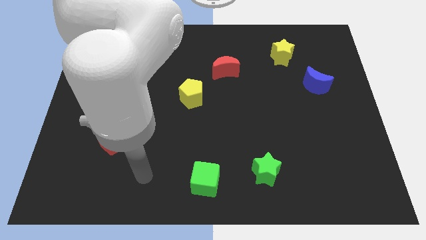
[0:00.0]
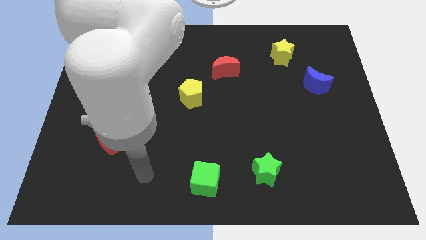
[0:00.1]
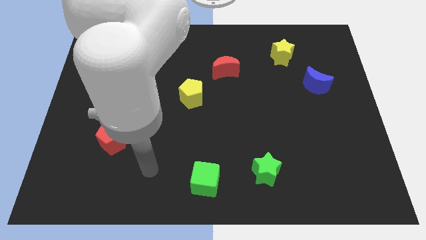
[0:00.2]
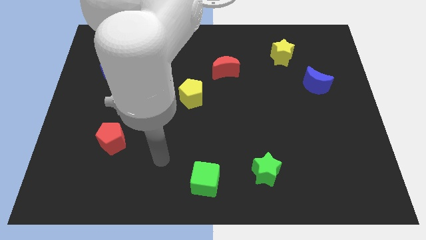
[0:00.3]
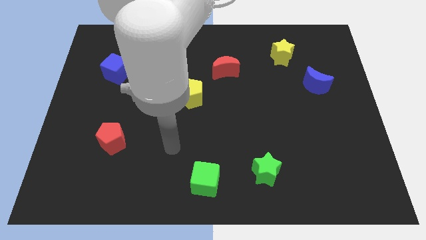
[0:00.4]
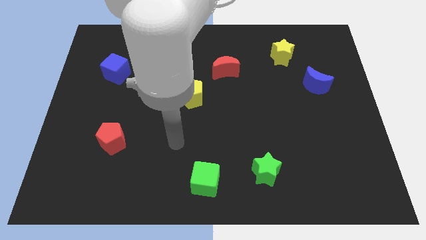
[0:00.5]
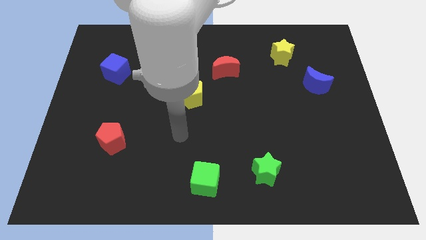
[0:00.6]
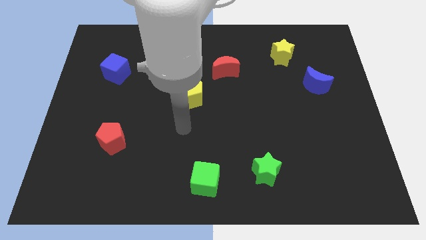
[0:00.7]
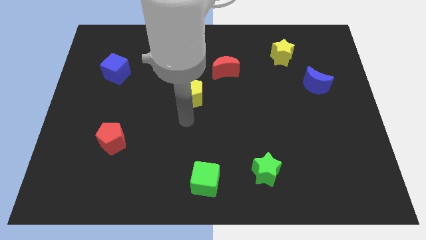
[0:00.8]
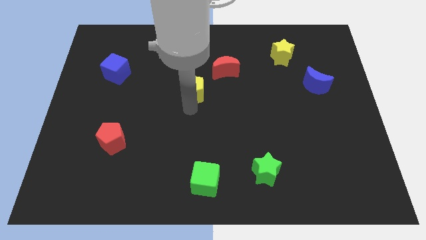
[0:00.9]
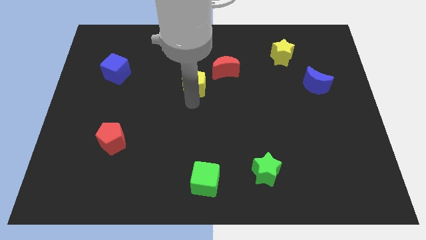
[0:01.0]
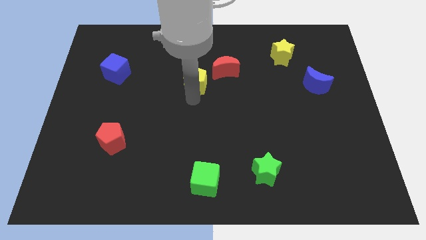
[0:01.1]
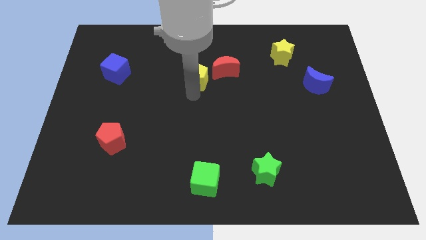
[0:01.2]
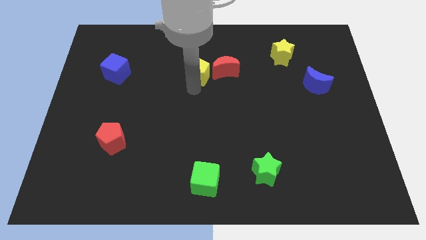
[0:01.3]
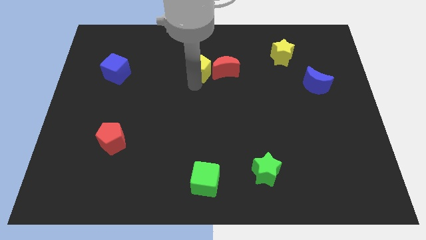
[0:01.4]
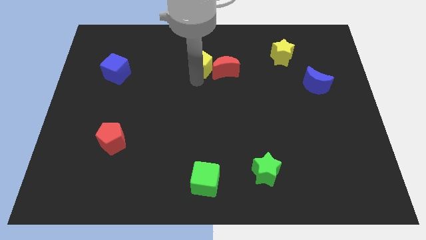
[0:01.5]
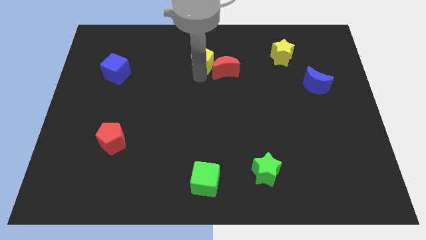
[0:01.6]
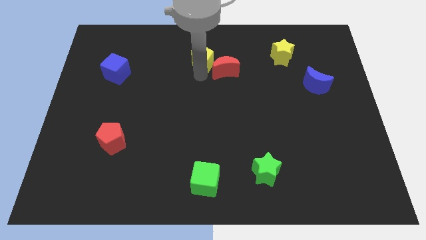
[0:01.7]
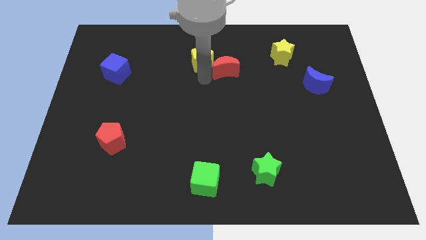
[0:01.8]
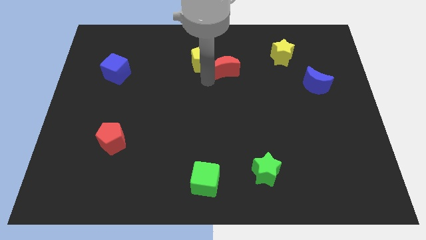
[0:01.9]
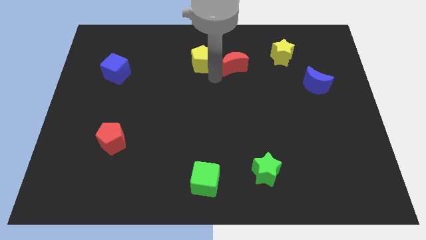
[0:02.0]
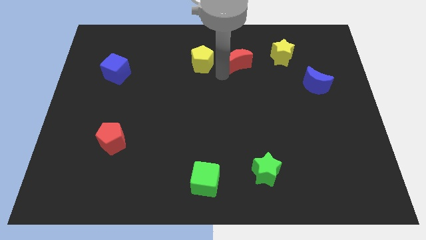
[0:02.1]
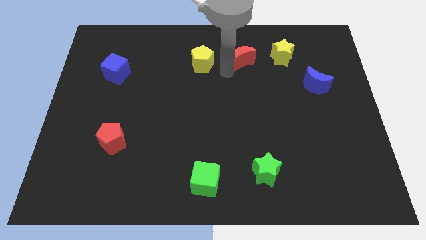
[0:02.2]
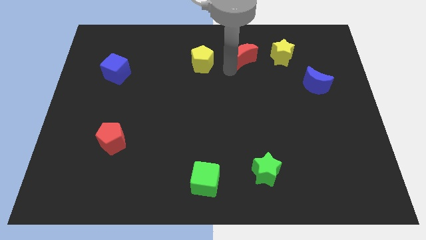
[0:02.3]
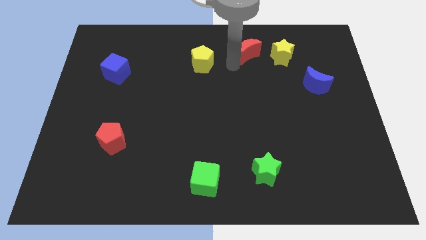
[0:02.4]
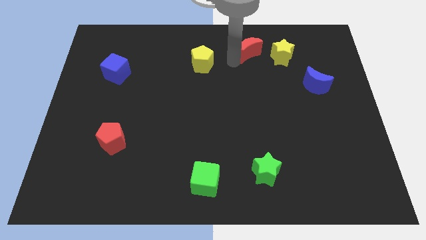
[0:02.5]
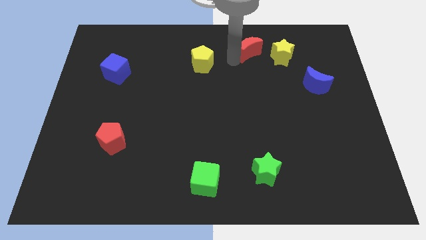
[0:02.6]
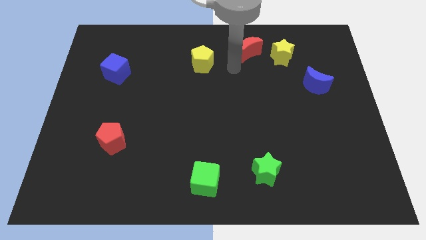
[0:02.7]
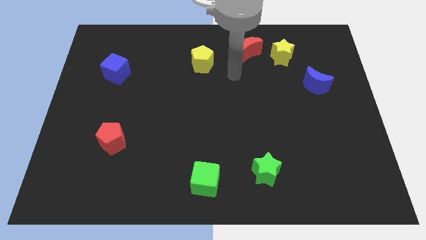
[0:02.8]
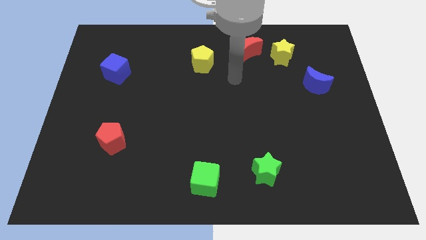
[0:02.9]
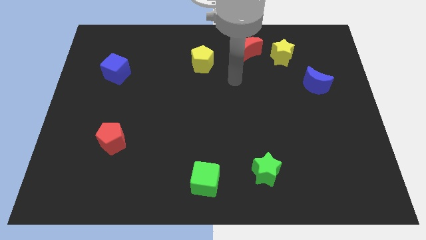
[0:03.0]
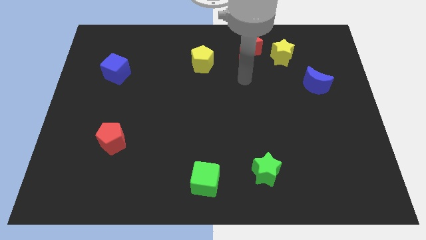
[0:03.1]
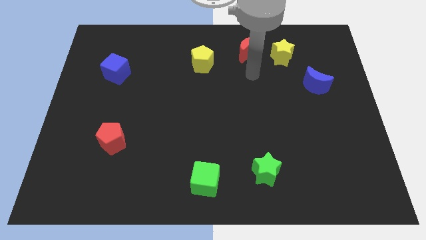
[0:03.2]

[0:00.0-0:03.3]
move the yellow pentagon and red moon to the top center

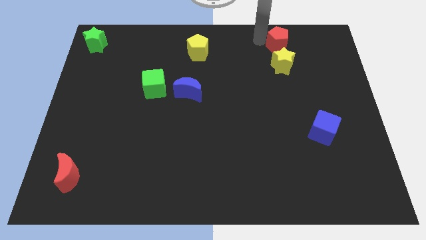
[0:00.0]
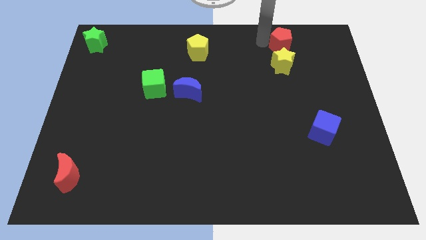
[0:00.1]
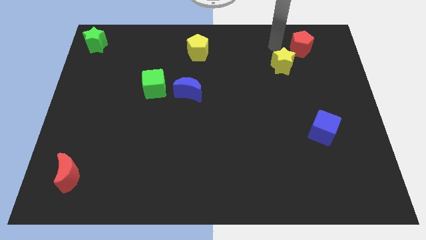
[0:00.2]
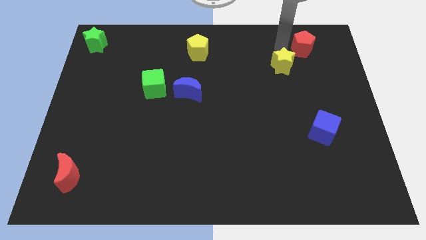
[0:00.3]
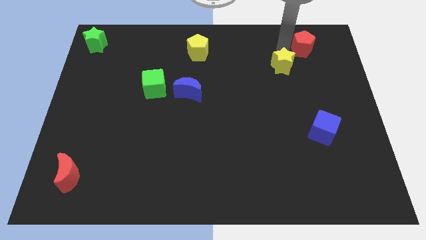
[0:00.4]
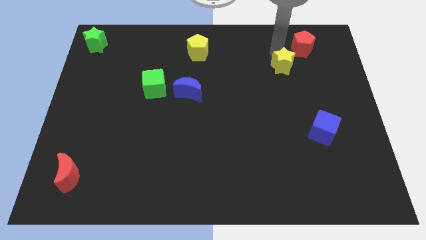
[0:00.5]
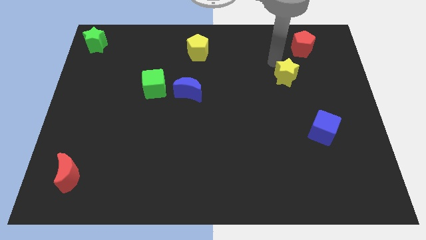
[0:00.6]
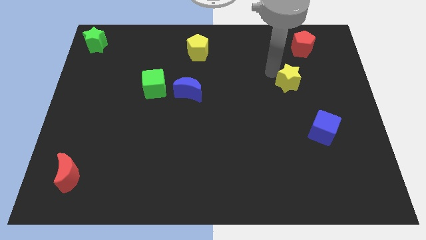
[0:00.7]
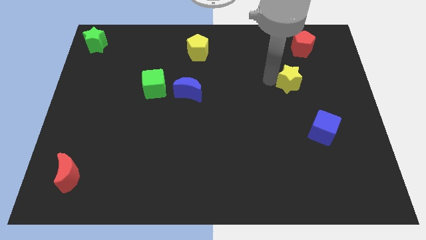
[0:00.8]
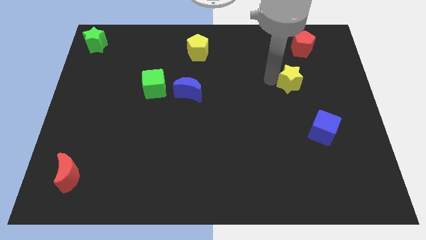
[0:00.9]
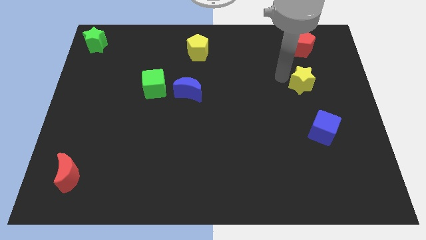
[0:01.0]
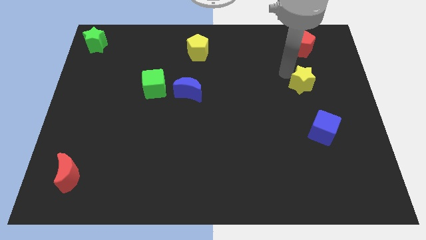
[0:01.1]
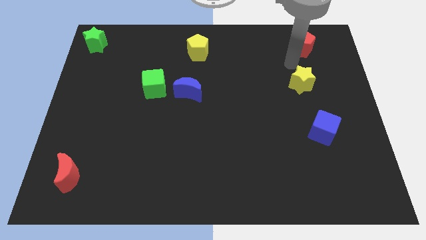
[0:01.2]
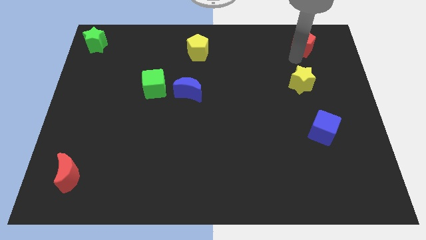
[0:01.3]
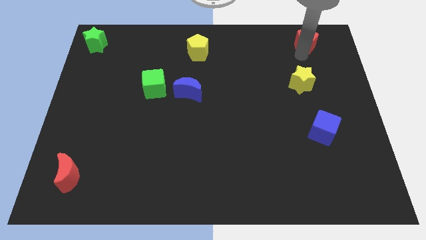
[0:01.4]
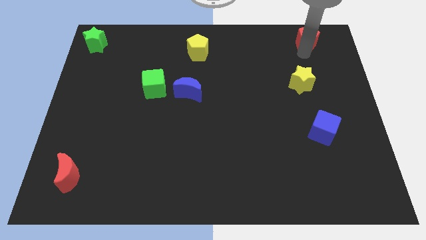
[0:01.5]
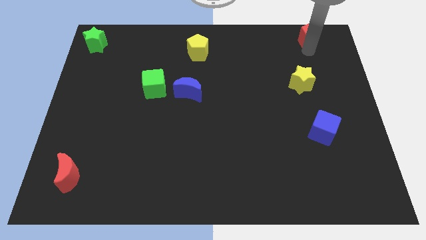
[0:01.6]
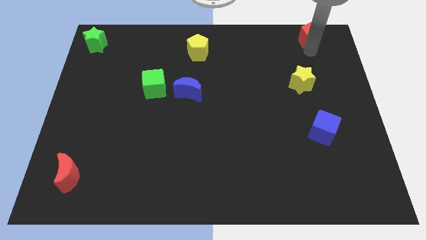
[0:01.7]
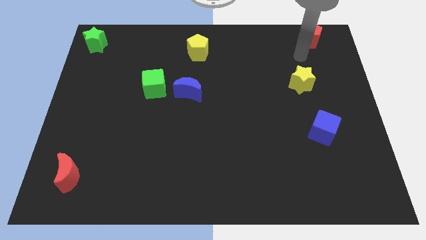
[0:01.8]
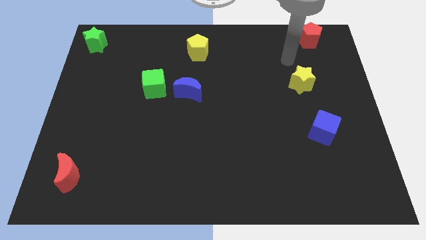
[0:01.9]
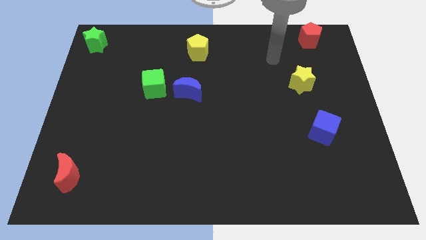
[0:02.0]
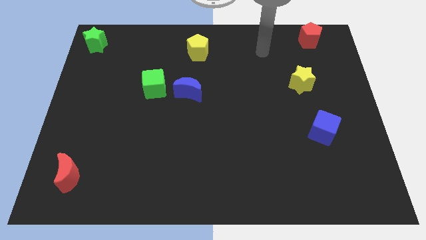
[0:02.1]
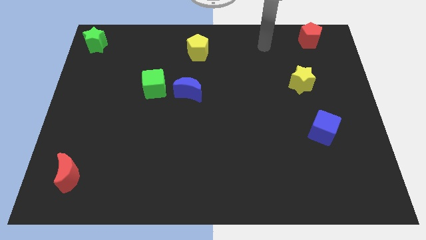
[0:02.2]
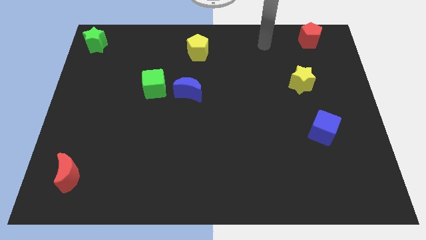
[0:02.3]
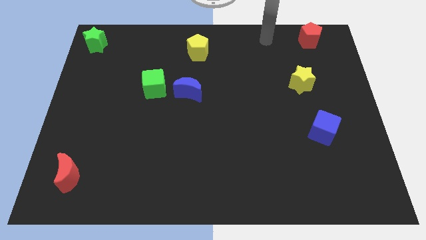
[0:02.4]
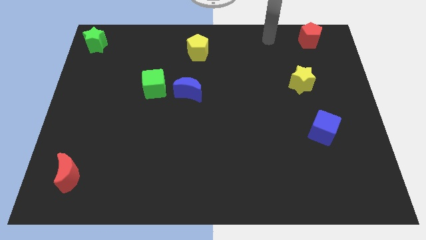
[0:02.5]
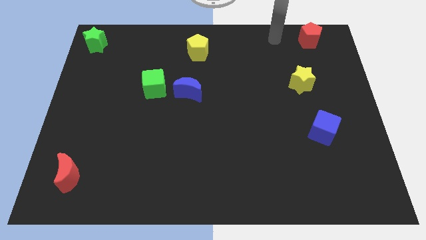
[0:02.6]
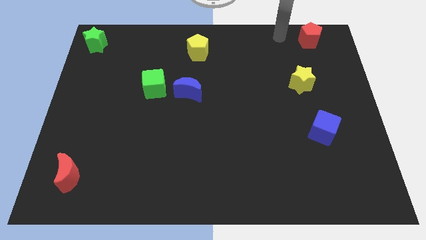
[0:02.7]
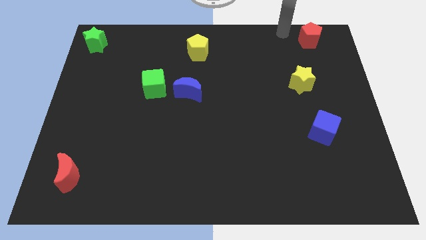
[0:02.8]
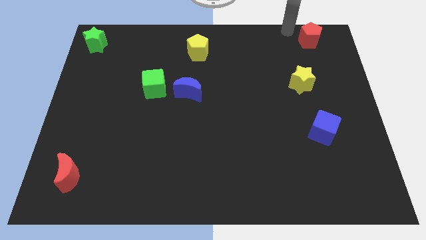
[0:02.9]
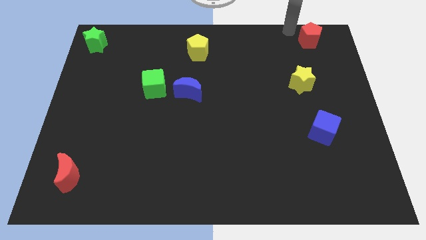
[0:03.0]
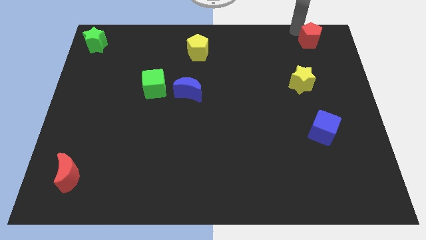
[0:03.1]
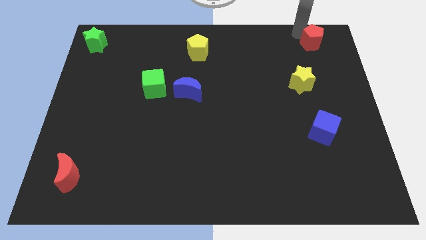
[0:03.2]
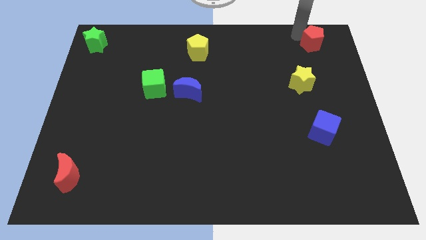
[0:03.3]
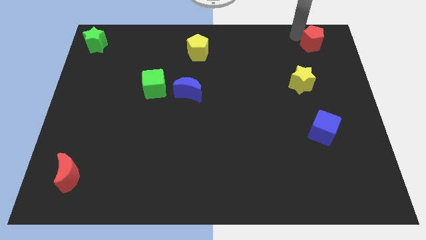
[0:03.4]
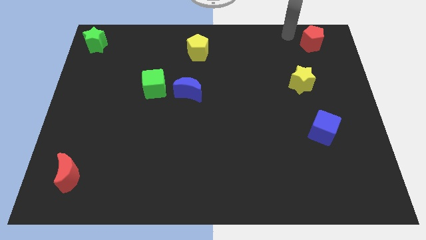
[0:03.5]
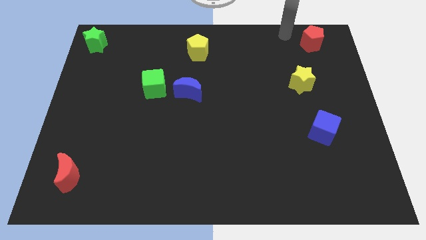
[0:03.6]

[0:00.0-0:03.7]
push the red pentagon towards the top right of the board

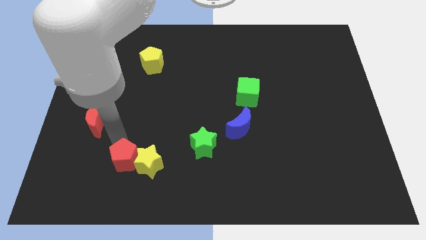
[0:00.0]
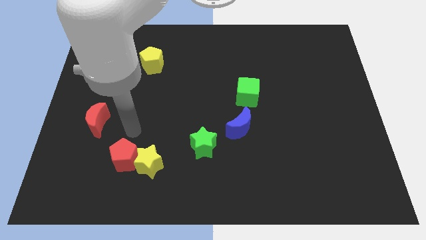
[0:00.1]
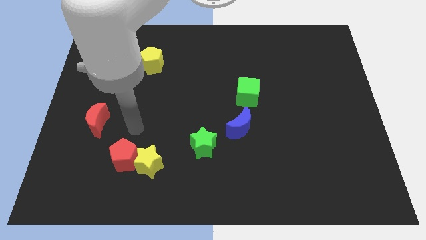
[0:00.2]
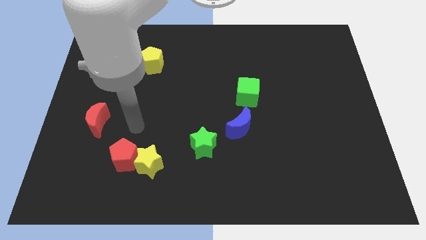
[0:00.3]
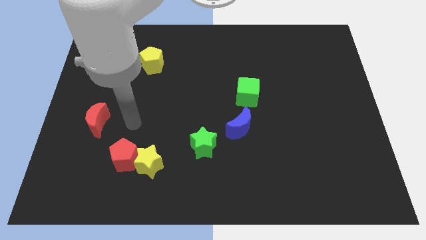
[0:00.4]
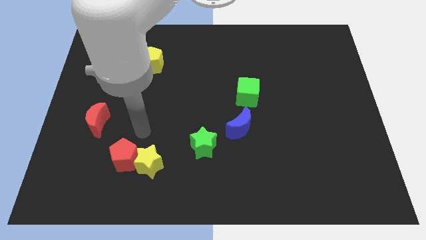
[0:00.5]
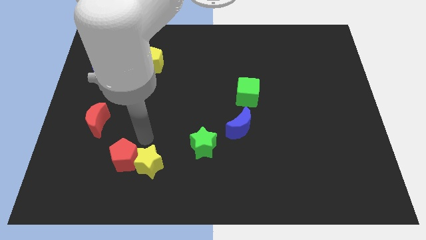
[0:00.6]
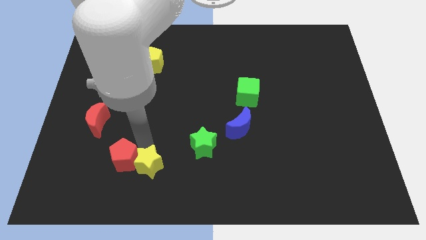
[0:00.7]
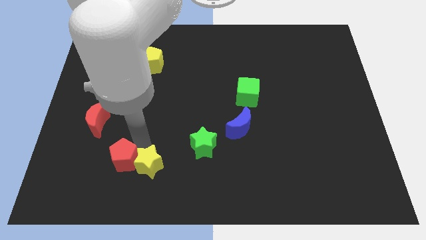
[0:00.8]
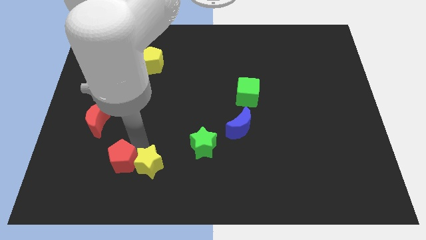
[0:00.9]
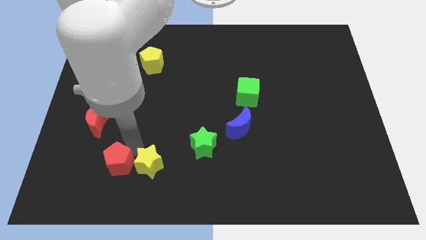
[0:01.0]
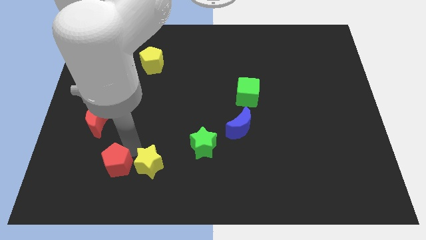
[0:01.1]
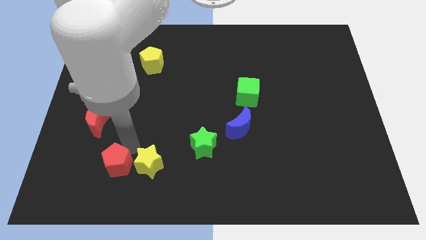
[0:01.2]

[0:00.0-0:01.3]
slightly push the red pentagon to the bottom of the board

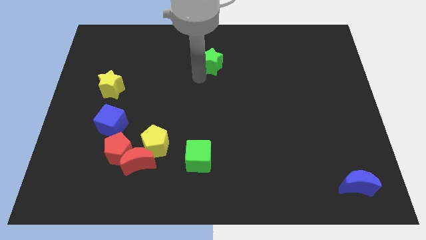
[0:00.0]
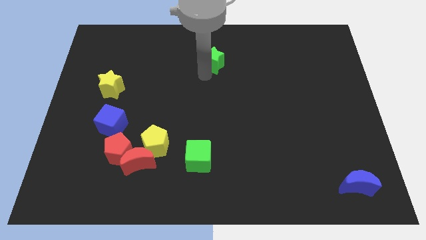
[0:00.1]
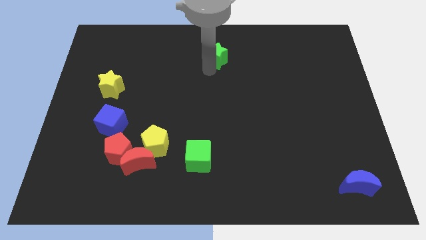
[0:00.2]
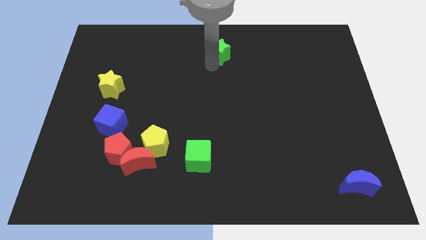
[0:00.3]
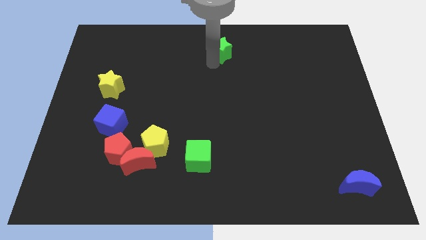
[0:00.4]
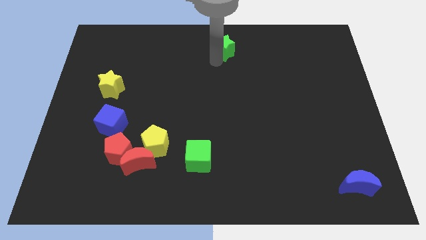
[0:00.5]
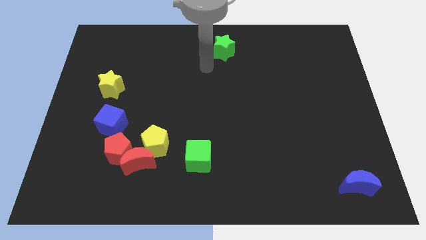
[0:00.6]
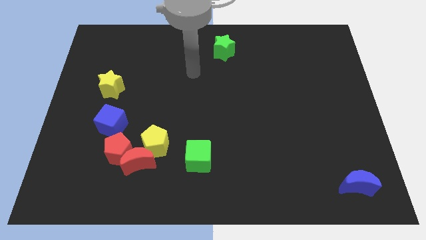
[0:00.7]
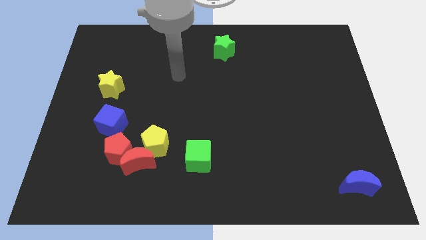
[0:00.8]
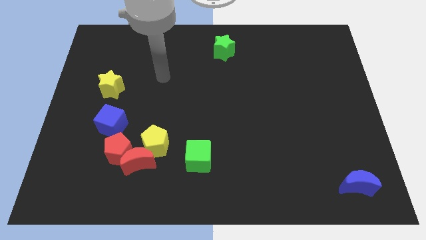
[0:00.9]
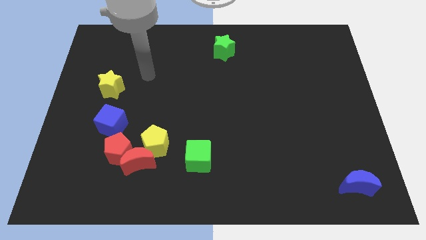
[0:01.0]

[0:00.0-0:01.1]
push the green star slightly towards up
